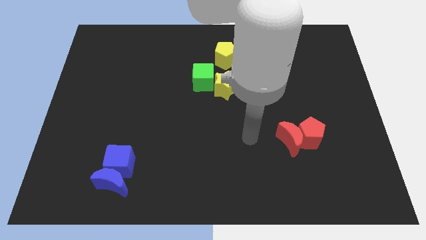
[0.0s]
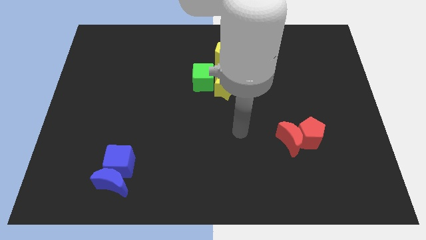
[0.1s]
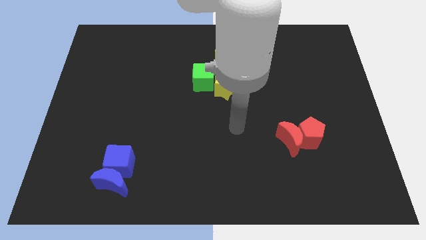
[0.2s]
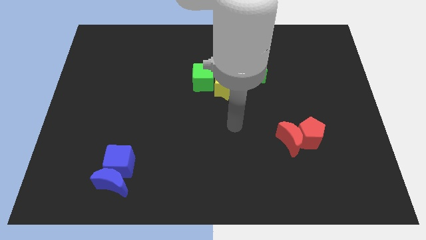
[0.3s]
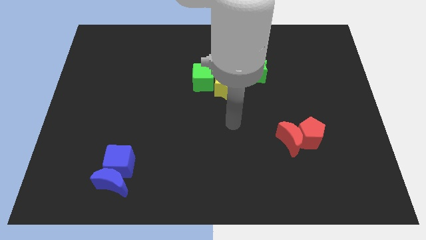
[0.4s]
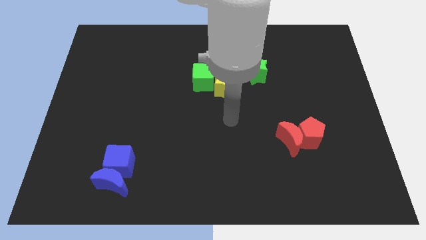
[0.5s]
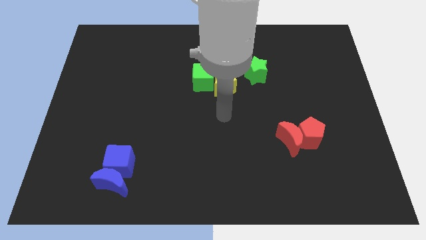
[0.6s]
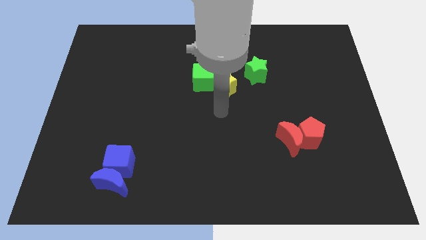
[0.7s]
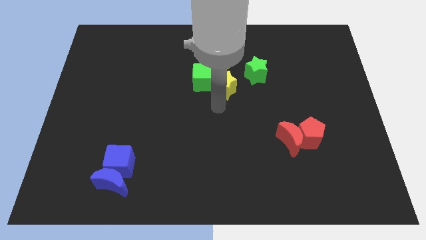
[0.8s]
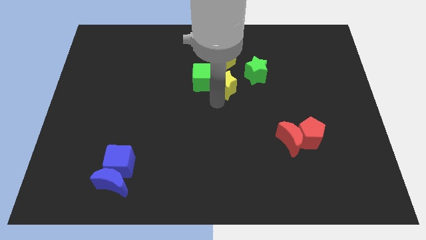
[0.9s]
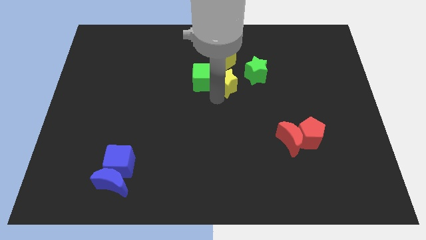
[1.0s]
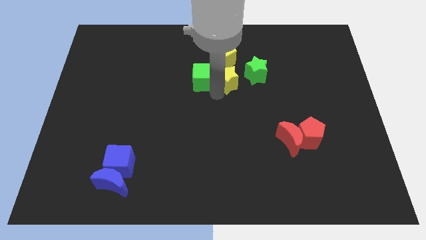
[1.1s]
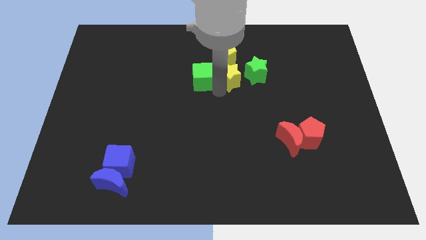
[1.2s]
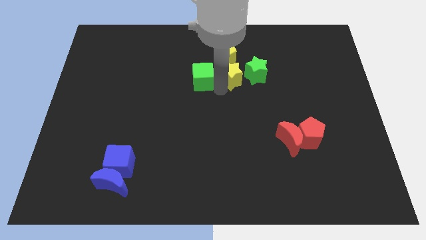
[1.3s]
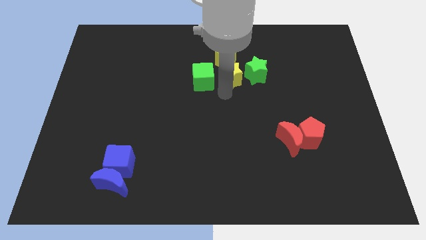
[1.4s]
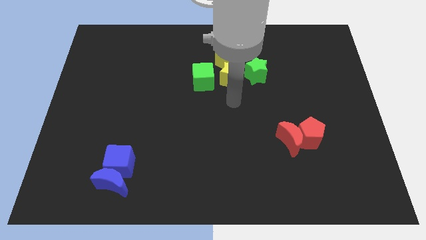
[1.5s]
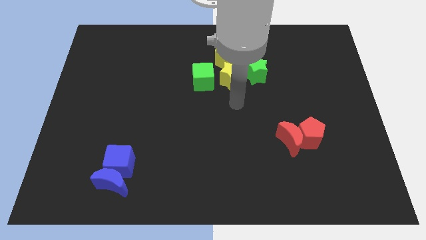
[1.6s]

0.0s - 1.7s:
separate the yellow star from the green cube

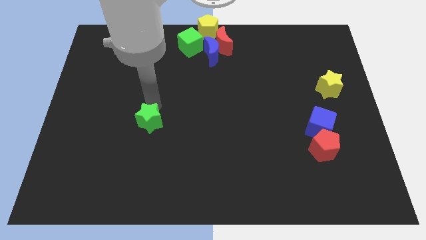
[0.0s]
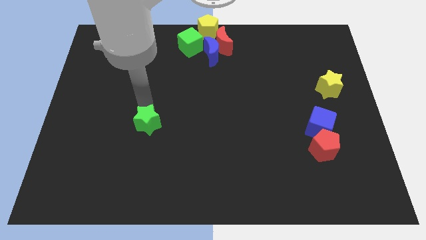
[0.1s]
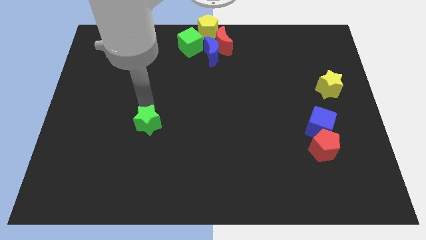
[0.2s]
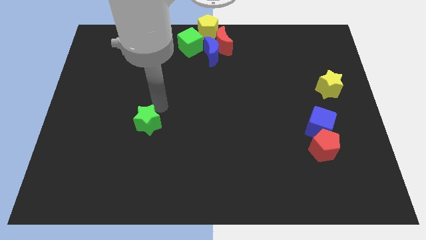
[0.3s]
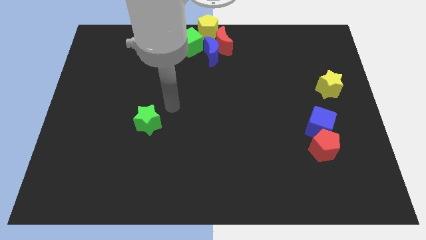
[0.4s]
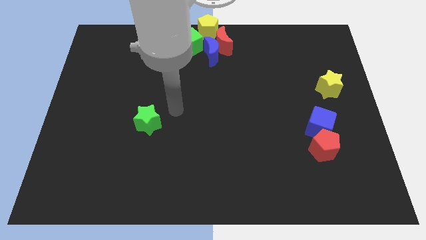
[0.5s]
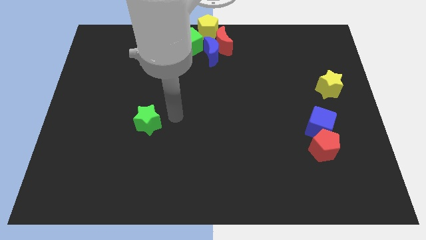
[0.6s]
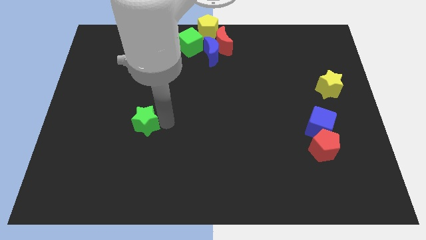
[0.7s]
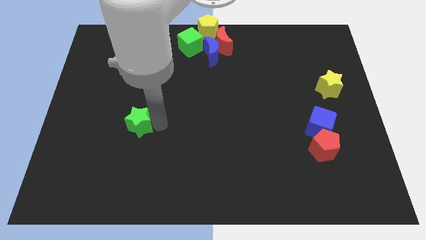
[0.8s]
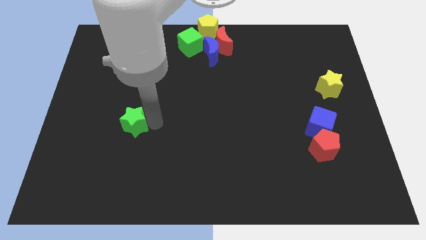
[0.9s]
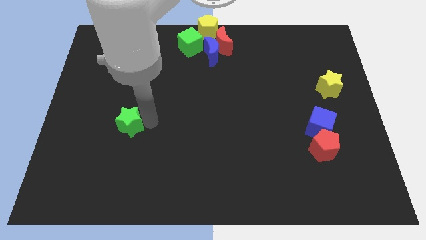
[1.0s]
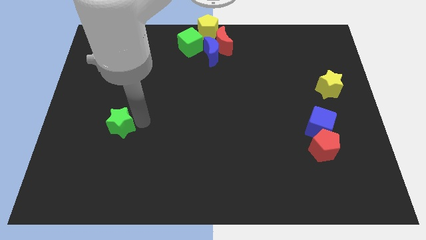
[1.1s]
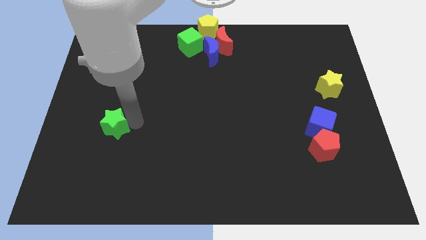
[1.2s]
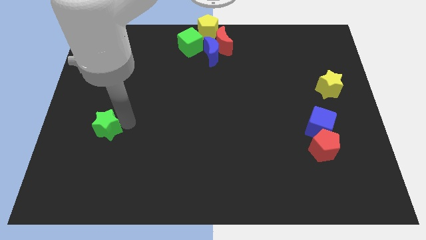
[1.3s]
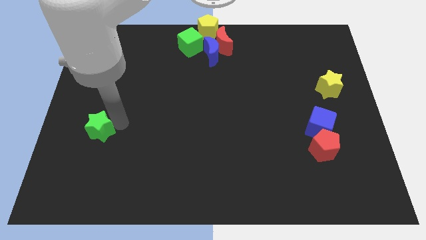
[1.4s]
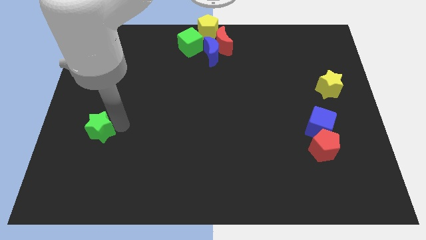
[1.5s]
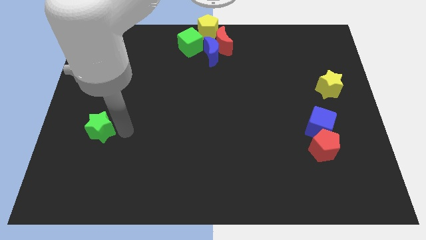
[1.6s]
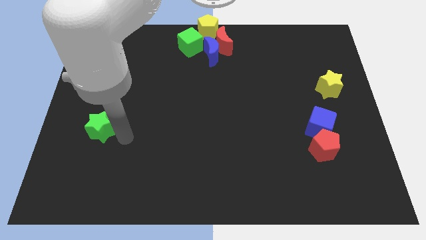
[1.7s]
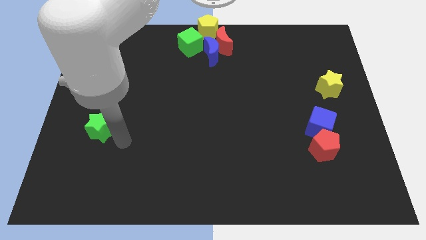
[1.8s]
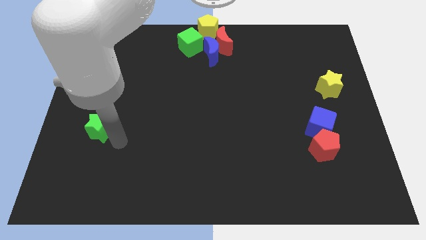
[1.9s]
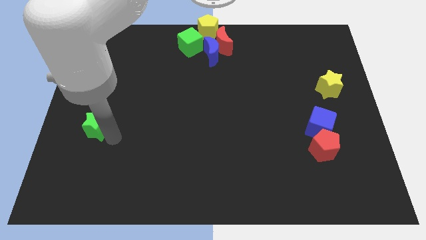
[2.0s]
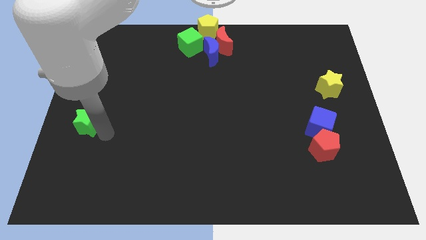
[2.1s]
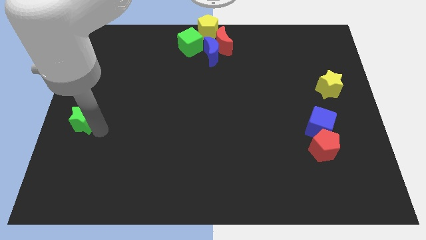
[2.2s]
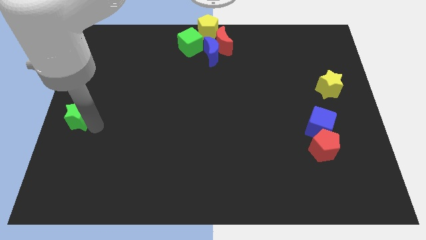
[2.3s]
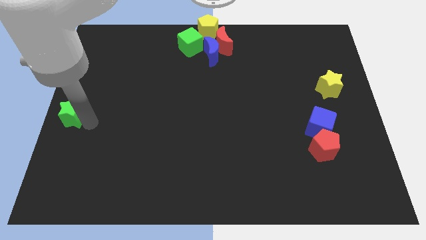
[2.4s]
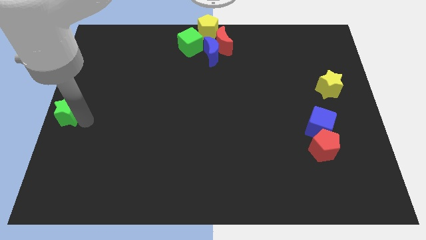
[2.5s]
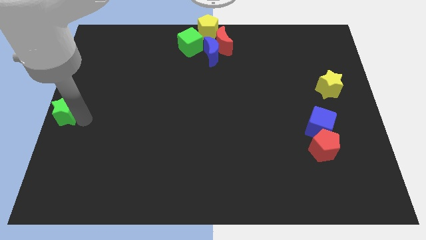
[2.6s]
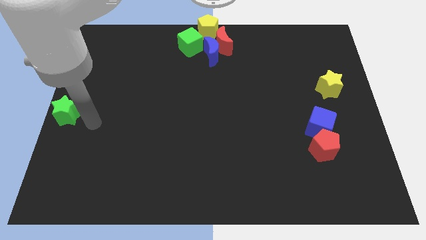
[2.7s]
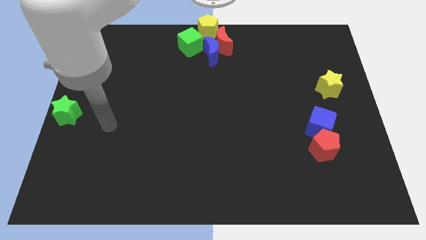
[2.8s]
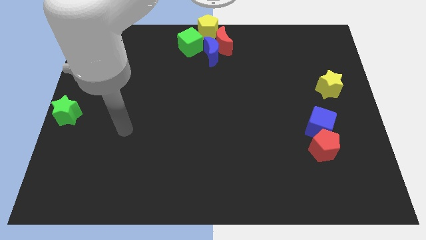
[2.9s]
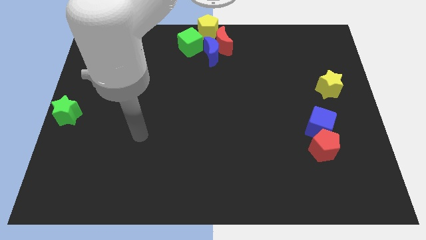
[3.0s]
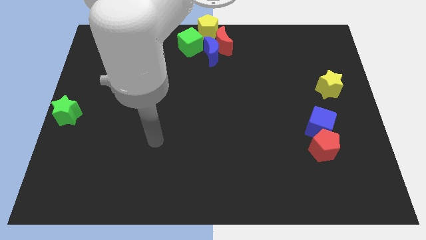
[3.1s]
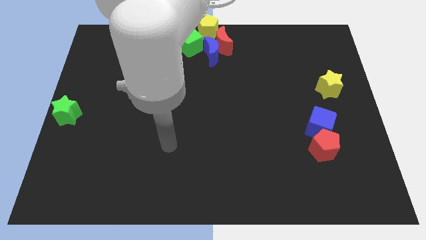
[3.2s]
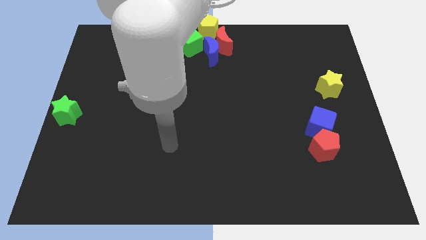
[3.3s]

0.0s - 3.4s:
place the green star to the center left side of the board

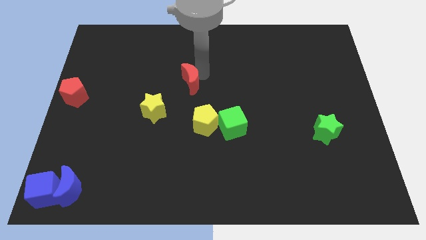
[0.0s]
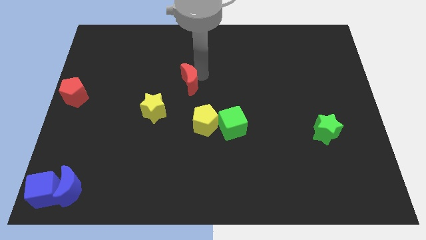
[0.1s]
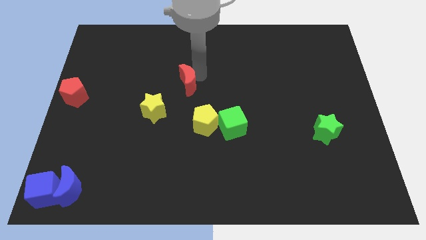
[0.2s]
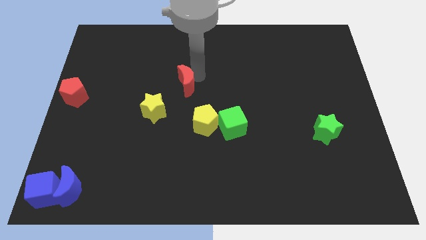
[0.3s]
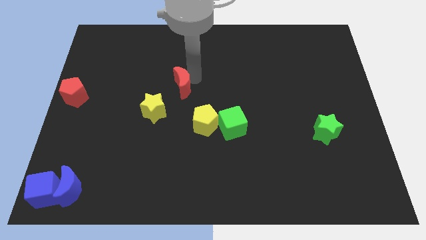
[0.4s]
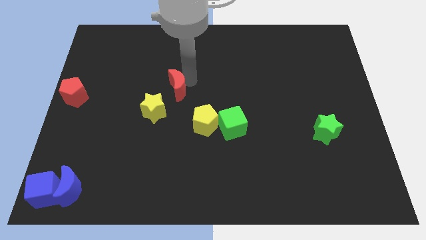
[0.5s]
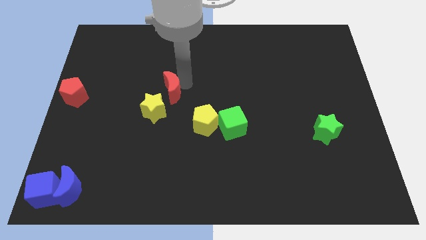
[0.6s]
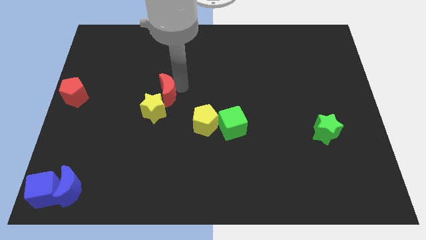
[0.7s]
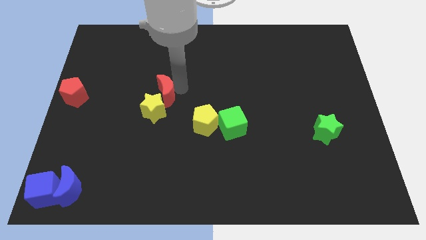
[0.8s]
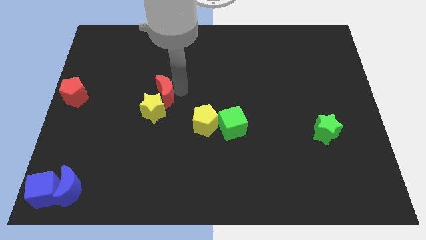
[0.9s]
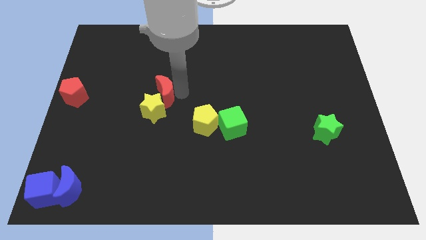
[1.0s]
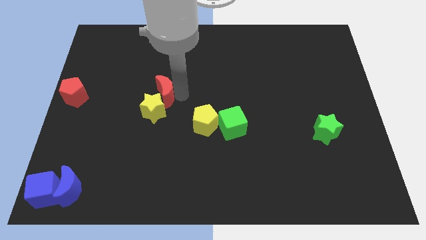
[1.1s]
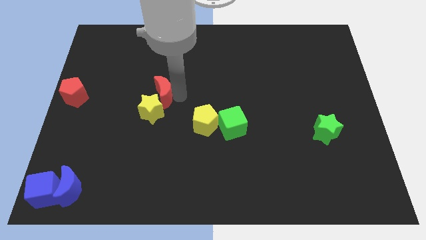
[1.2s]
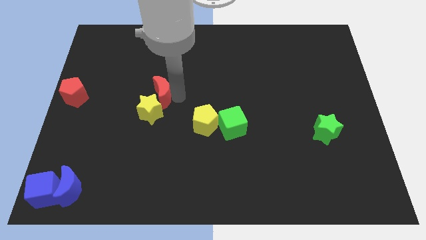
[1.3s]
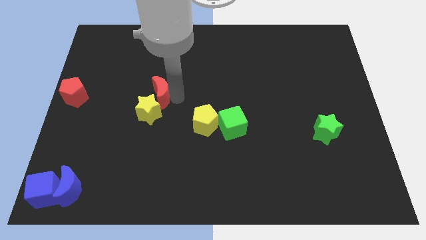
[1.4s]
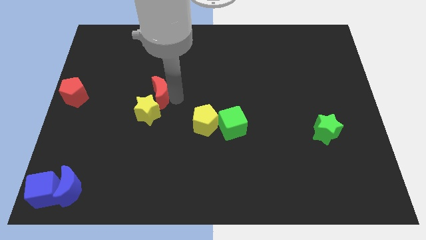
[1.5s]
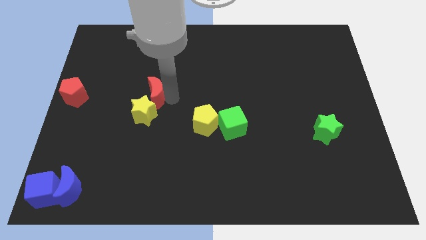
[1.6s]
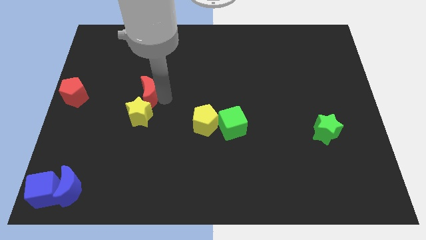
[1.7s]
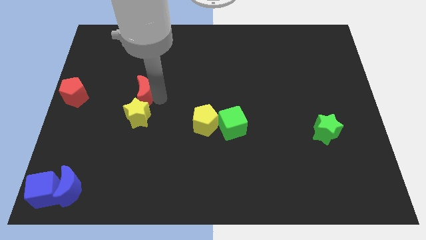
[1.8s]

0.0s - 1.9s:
move the red crescent to right of yellow star

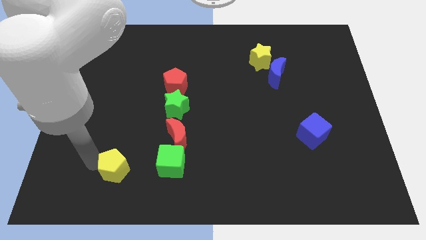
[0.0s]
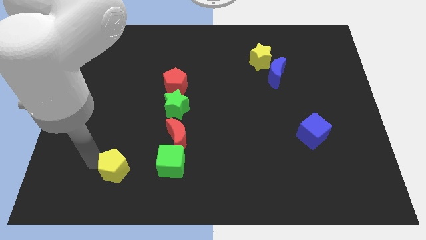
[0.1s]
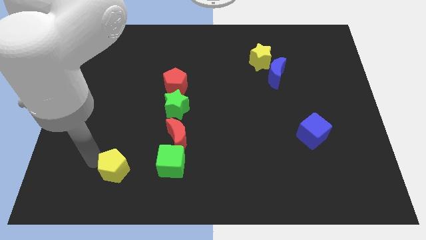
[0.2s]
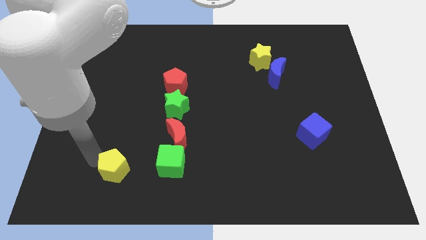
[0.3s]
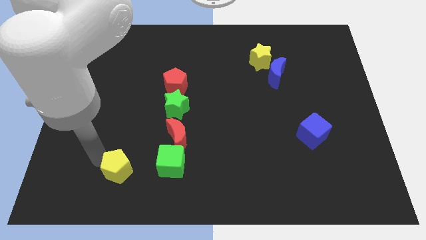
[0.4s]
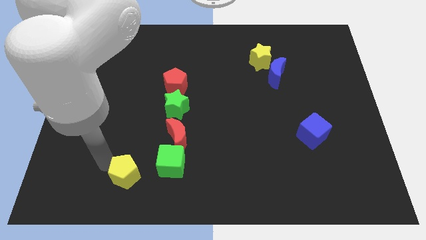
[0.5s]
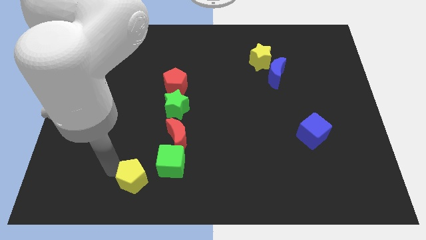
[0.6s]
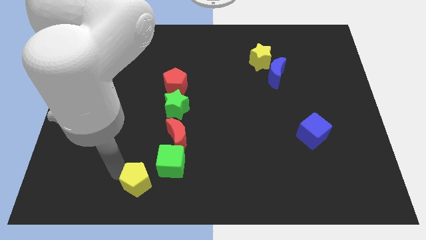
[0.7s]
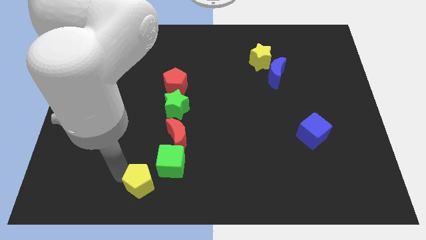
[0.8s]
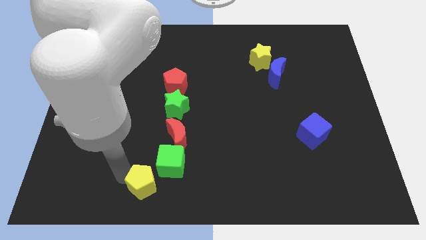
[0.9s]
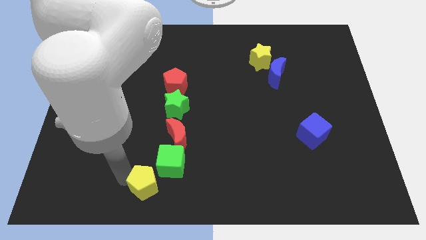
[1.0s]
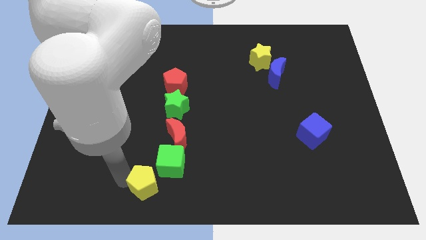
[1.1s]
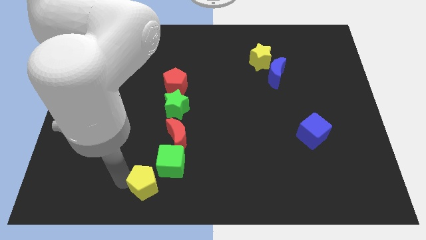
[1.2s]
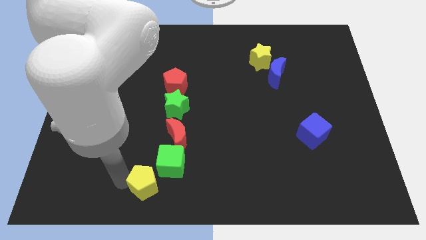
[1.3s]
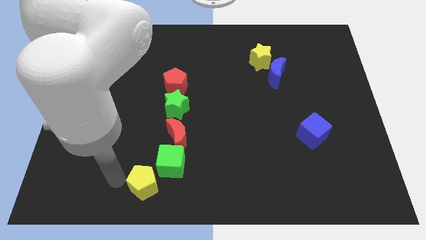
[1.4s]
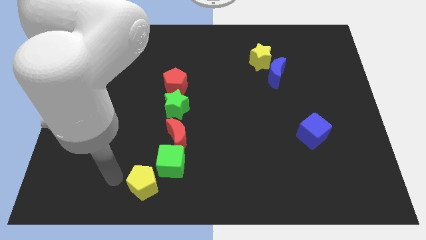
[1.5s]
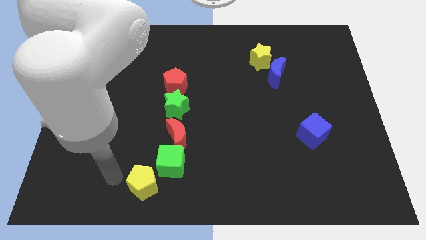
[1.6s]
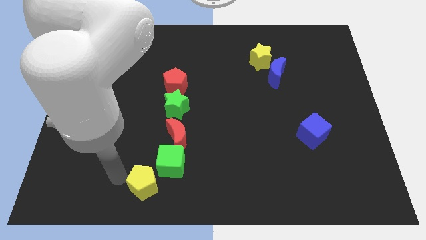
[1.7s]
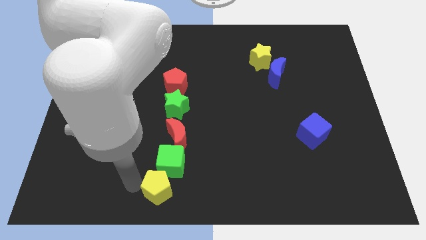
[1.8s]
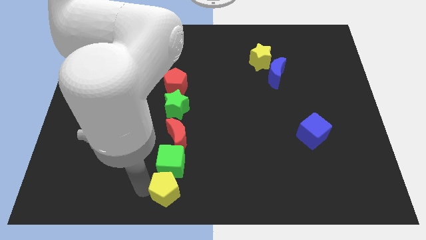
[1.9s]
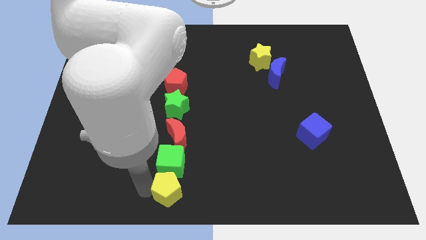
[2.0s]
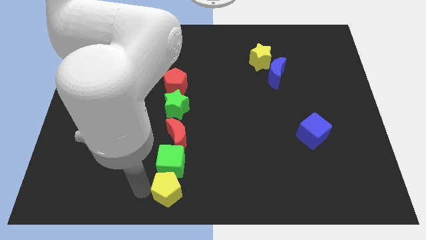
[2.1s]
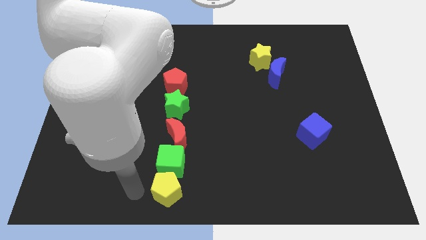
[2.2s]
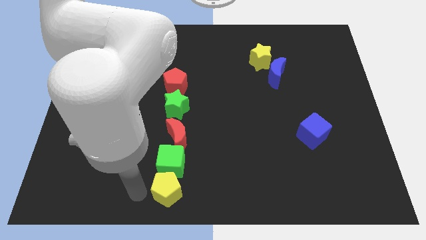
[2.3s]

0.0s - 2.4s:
place the yellow pentagon below green cube
